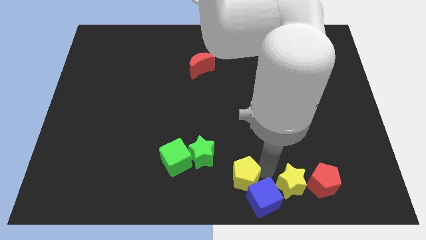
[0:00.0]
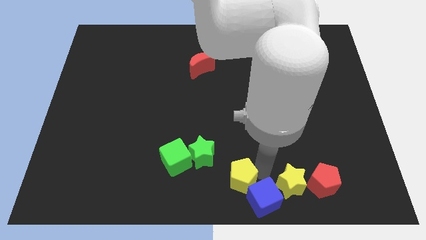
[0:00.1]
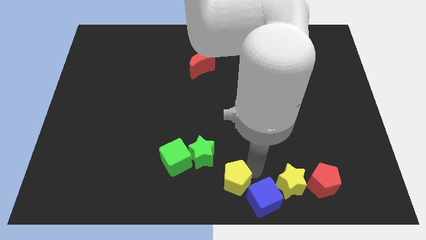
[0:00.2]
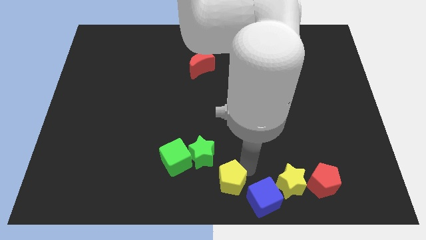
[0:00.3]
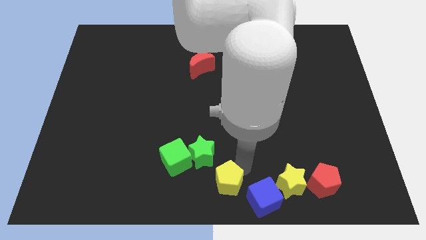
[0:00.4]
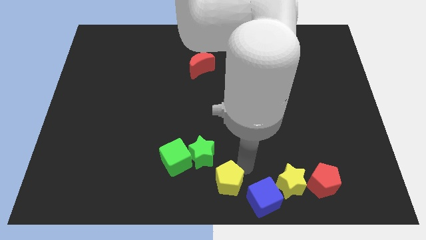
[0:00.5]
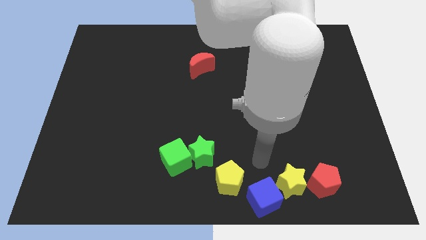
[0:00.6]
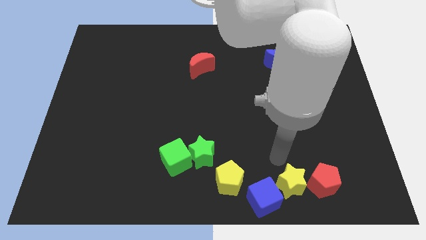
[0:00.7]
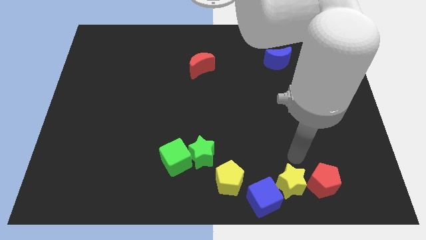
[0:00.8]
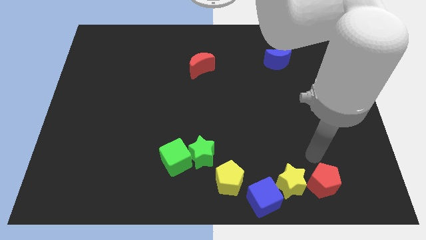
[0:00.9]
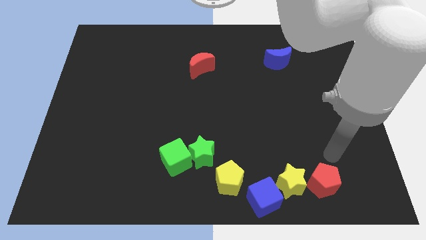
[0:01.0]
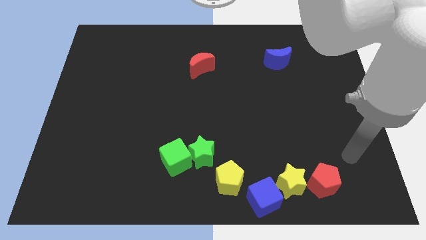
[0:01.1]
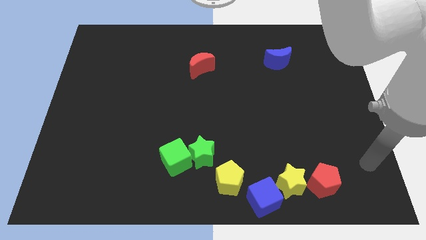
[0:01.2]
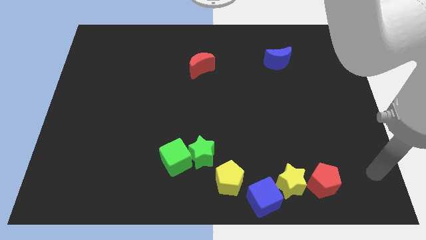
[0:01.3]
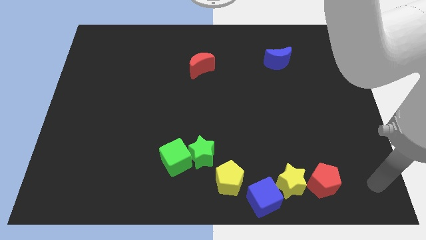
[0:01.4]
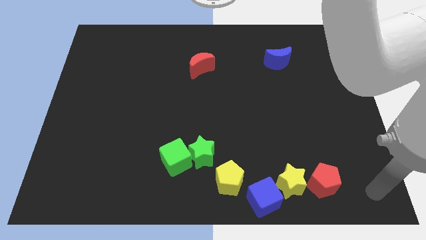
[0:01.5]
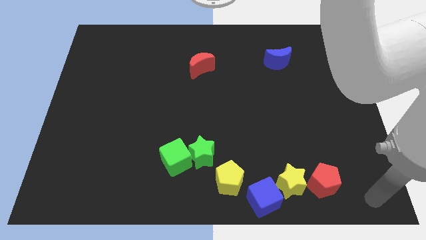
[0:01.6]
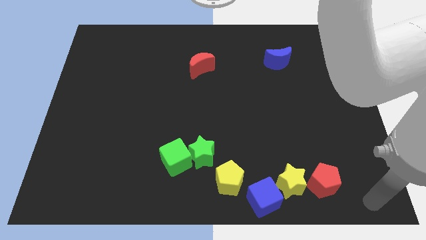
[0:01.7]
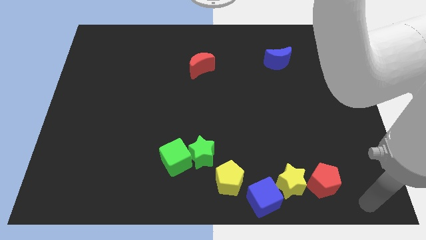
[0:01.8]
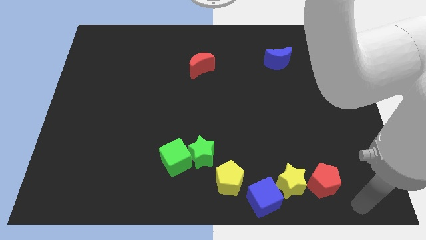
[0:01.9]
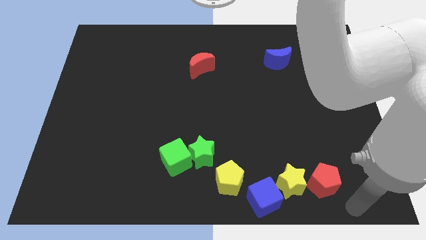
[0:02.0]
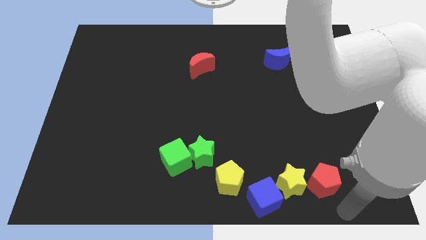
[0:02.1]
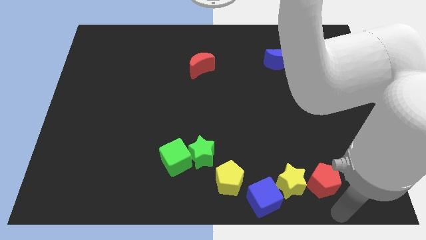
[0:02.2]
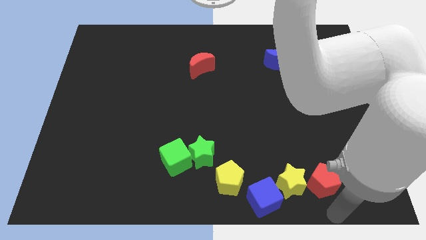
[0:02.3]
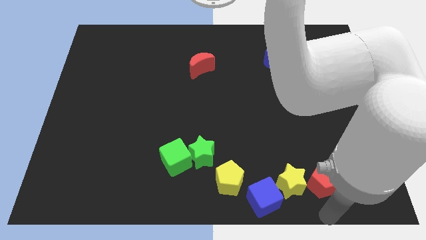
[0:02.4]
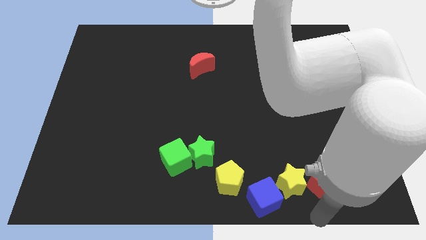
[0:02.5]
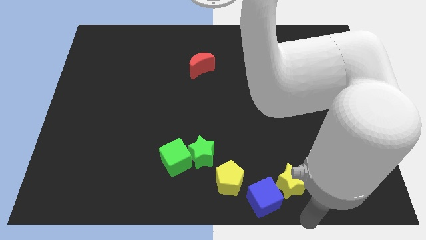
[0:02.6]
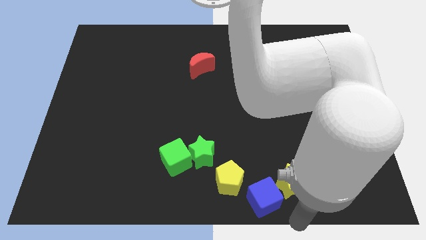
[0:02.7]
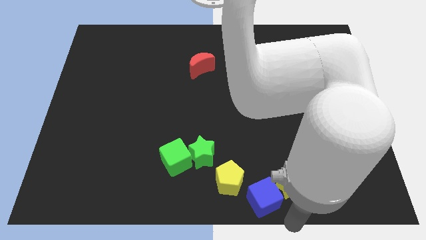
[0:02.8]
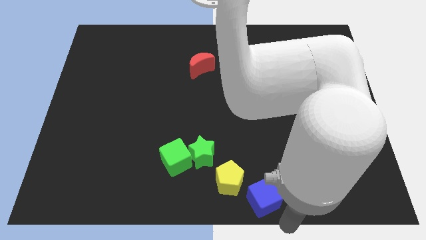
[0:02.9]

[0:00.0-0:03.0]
separate the yellow pentagon and blue cube

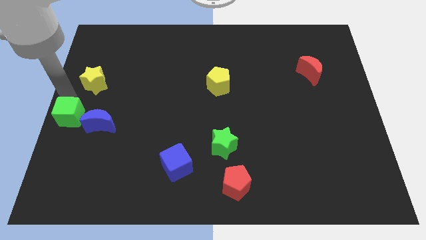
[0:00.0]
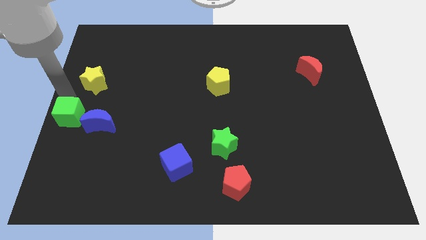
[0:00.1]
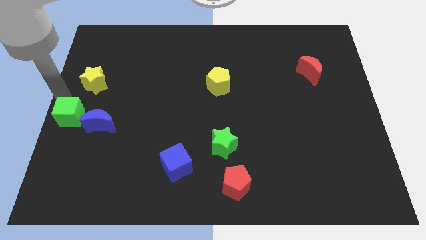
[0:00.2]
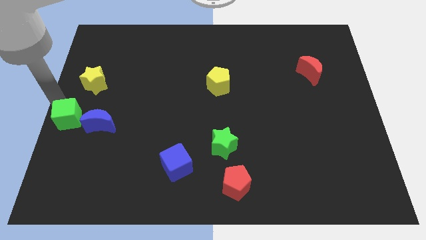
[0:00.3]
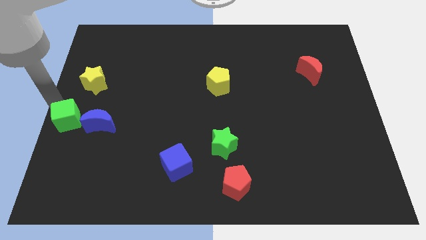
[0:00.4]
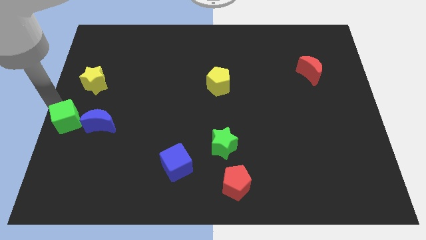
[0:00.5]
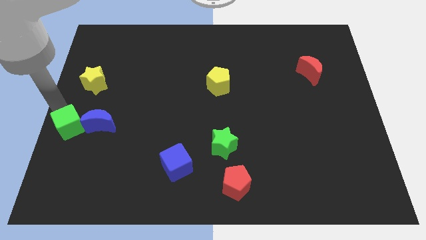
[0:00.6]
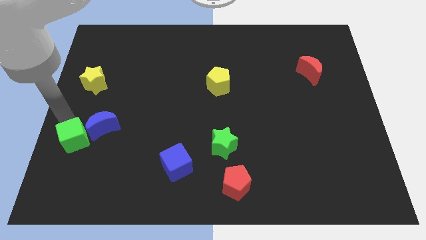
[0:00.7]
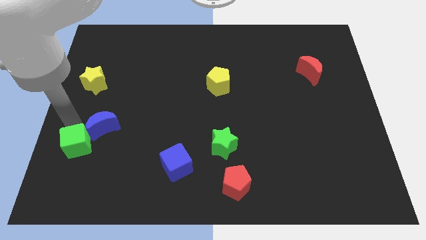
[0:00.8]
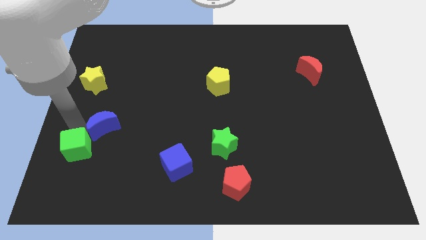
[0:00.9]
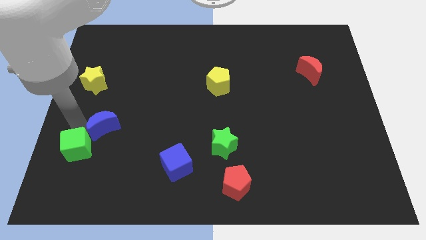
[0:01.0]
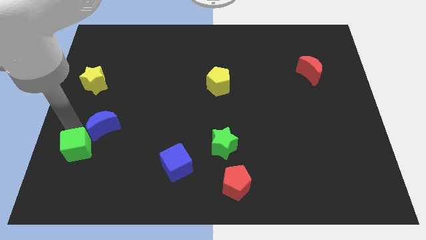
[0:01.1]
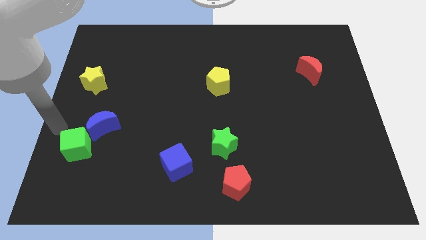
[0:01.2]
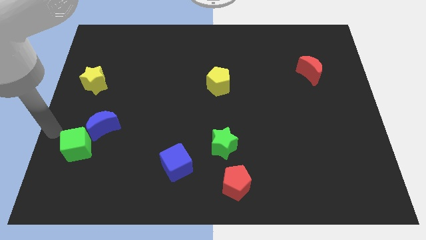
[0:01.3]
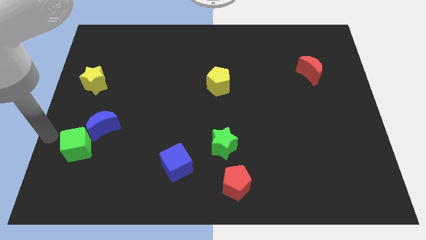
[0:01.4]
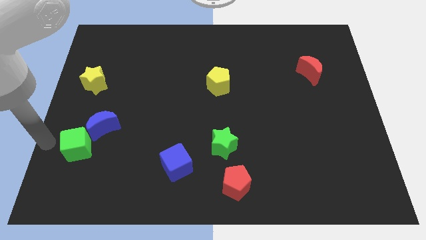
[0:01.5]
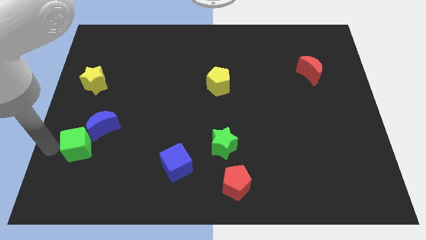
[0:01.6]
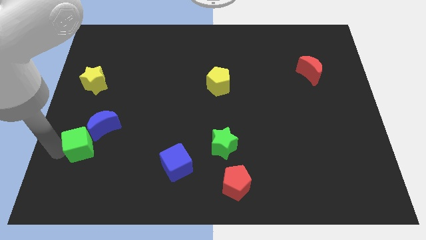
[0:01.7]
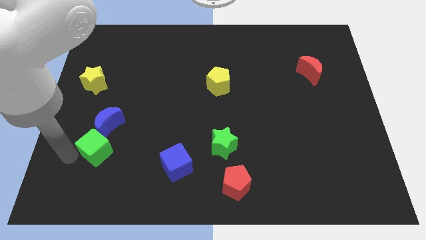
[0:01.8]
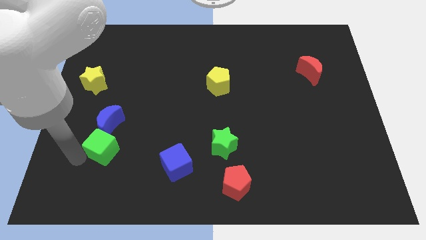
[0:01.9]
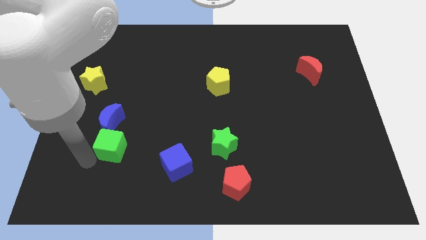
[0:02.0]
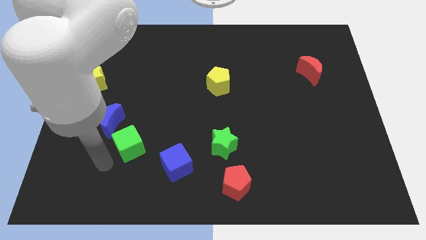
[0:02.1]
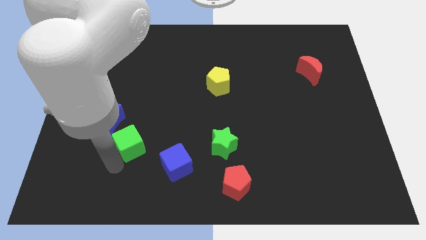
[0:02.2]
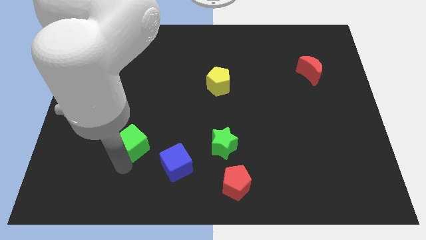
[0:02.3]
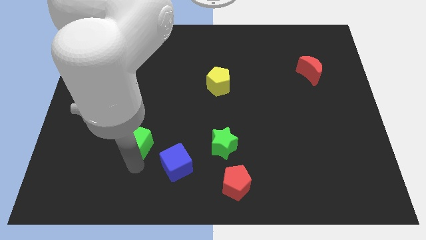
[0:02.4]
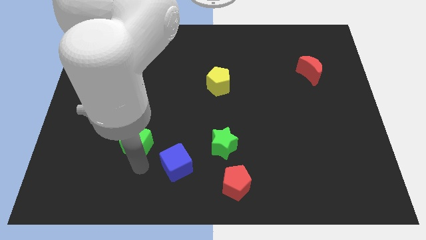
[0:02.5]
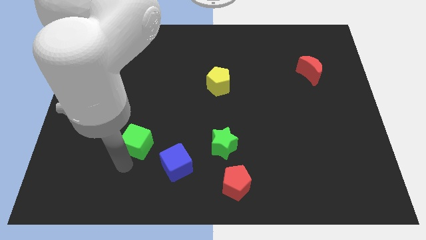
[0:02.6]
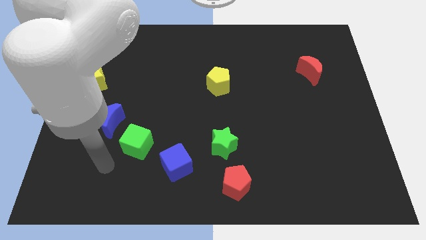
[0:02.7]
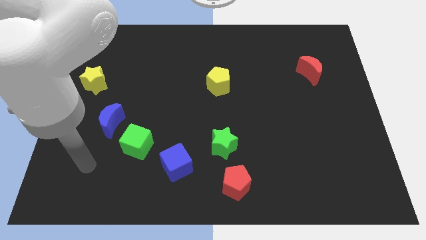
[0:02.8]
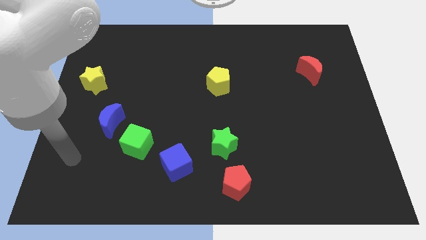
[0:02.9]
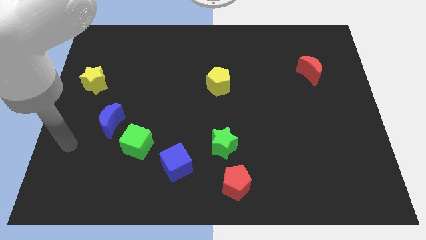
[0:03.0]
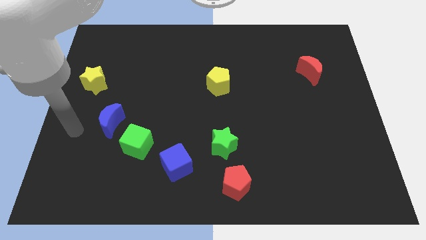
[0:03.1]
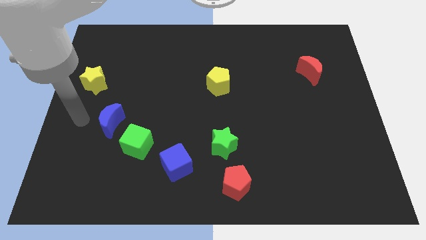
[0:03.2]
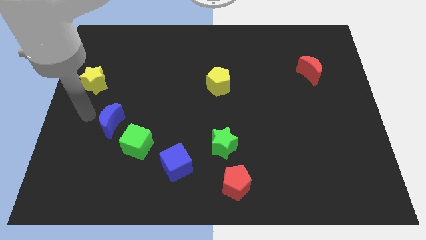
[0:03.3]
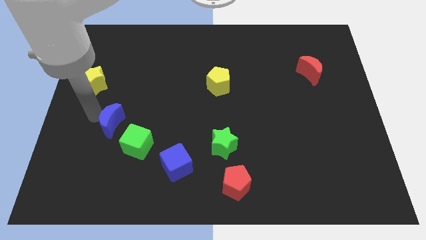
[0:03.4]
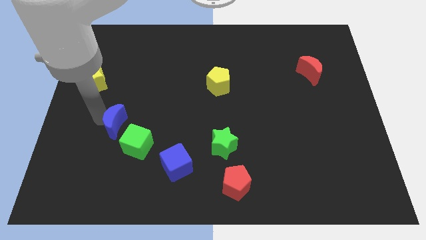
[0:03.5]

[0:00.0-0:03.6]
push the green cube and blue moon into the blue cube

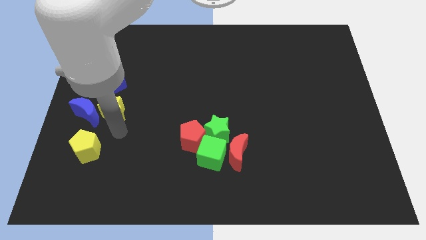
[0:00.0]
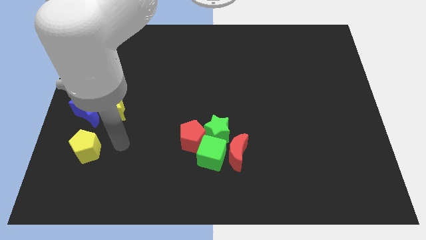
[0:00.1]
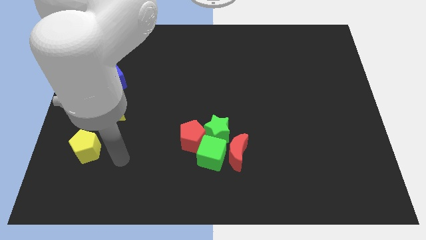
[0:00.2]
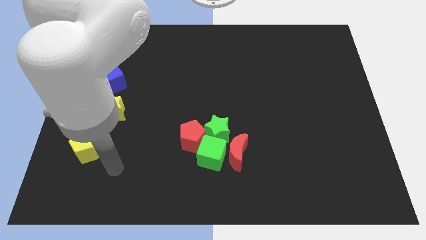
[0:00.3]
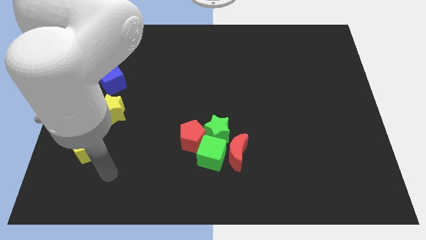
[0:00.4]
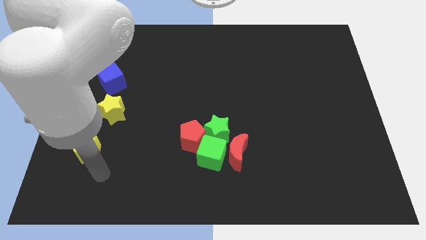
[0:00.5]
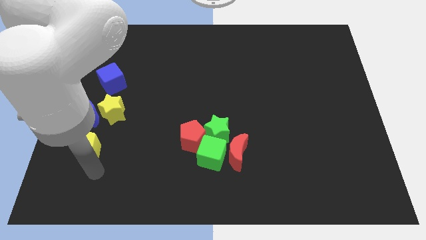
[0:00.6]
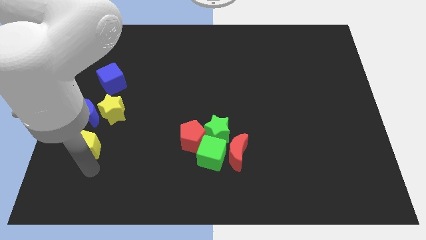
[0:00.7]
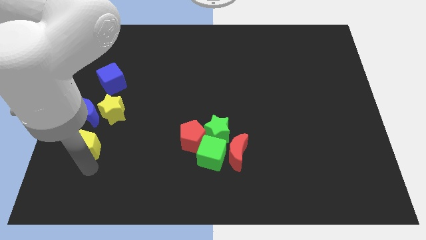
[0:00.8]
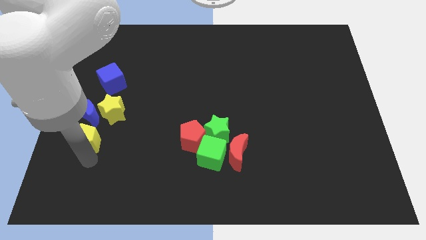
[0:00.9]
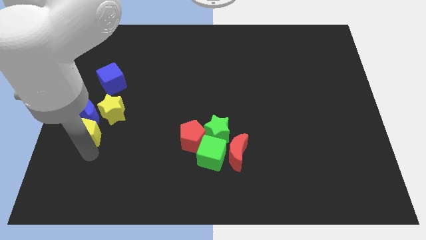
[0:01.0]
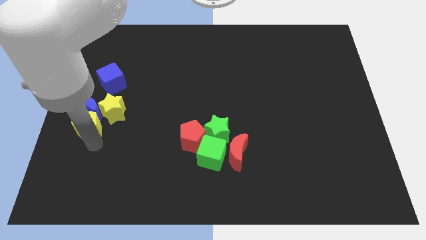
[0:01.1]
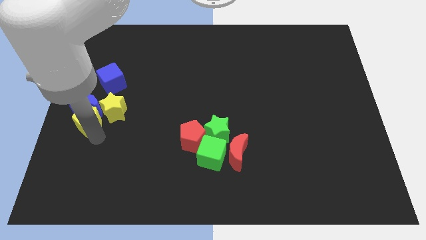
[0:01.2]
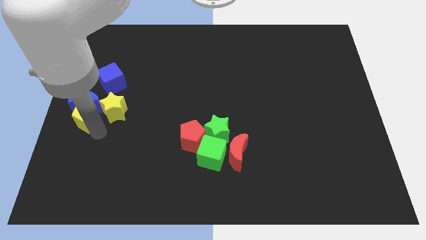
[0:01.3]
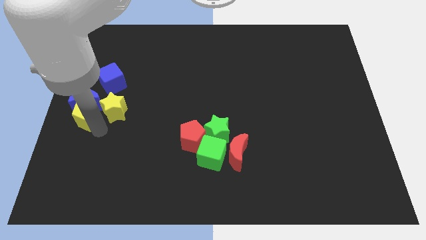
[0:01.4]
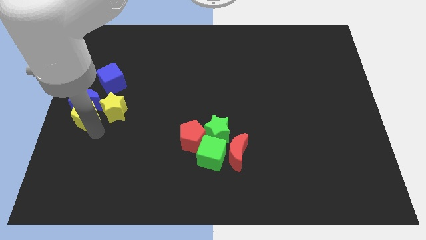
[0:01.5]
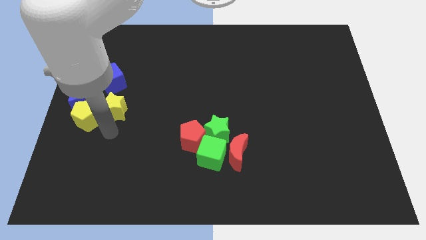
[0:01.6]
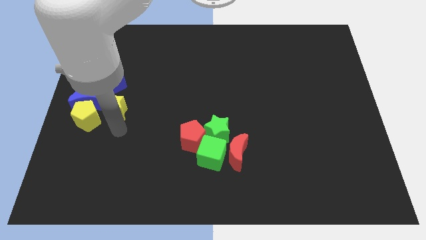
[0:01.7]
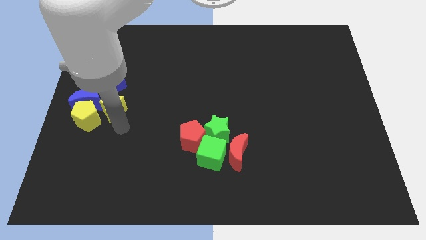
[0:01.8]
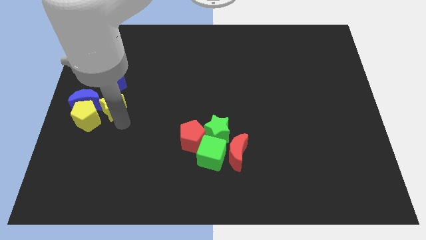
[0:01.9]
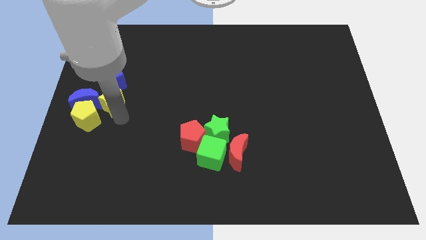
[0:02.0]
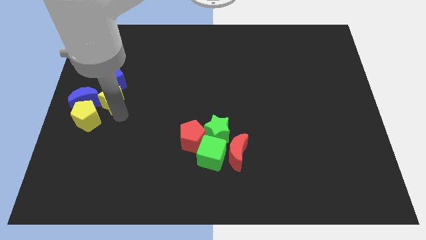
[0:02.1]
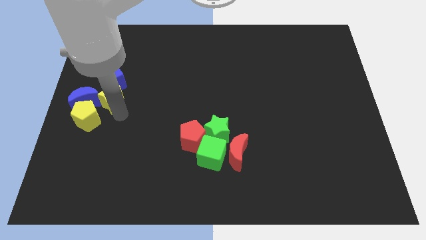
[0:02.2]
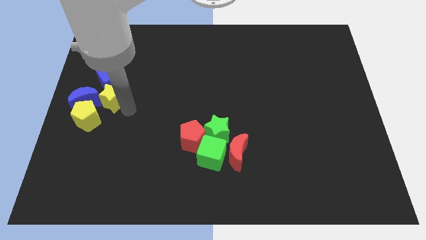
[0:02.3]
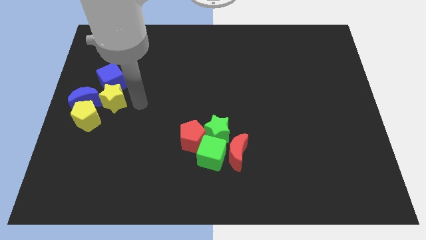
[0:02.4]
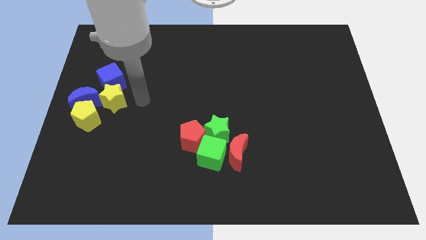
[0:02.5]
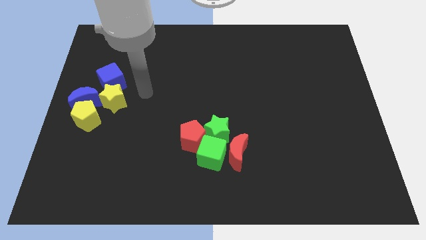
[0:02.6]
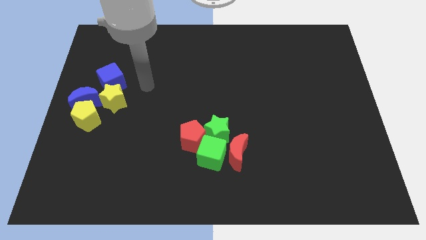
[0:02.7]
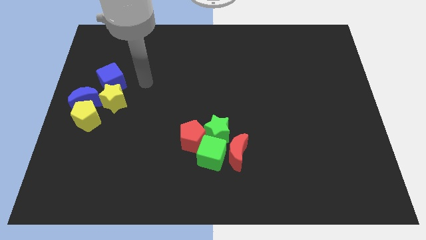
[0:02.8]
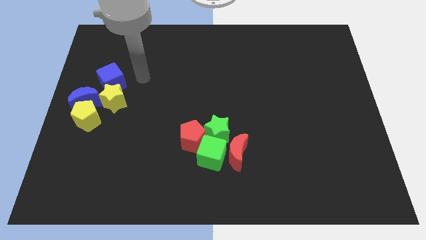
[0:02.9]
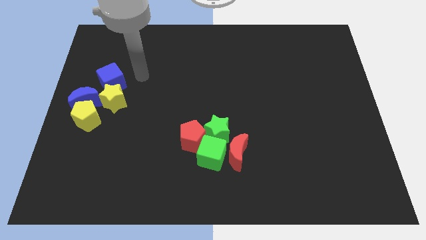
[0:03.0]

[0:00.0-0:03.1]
push the yellow pentagon into blue moon
